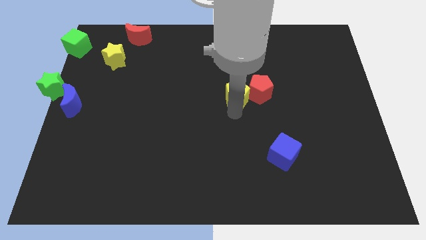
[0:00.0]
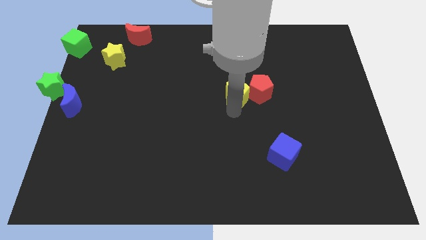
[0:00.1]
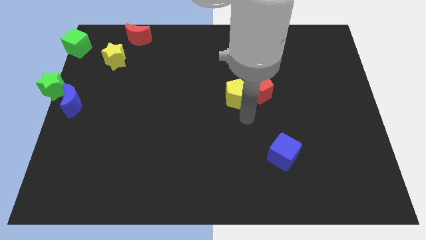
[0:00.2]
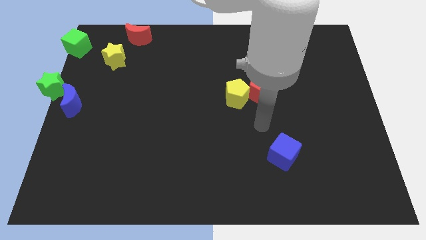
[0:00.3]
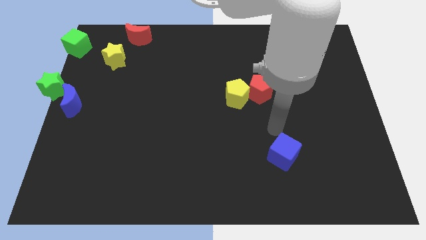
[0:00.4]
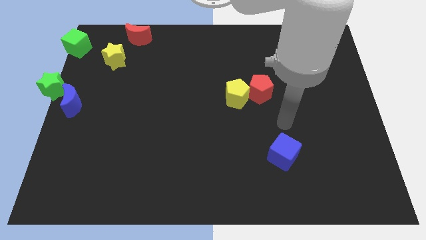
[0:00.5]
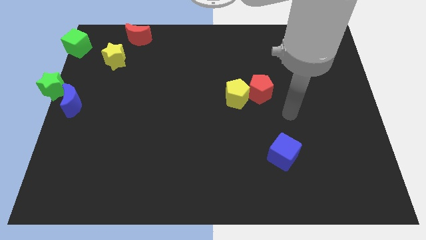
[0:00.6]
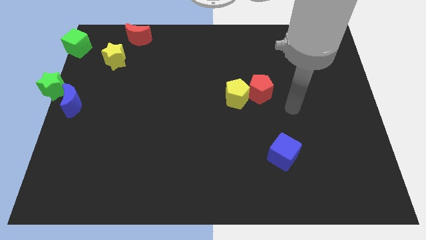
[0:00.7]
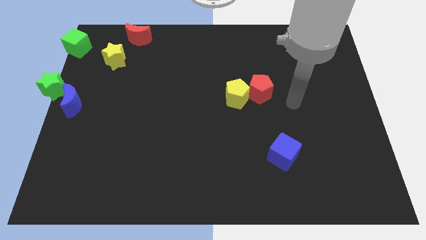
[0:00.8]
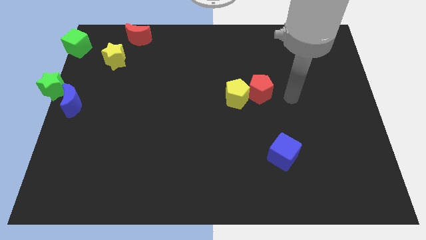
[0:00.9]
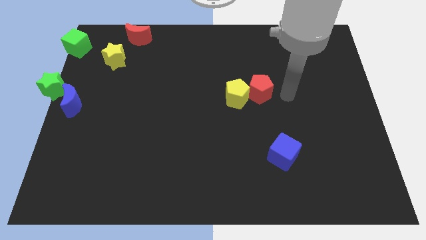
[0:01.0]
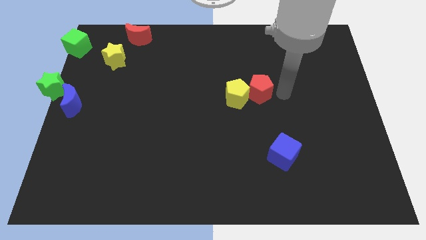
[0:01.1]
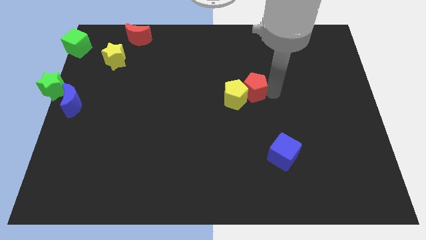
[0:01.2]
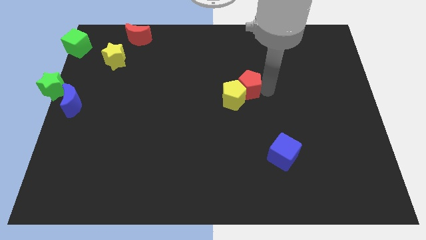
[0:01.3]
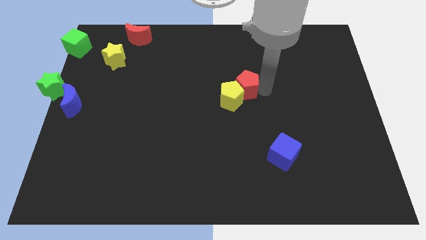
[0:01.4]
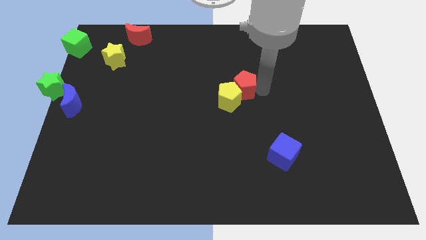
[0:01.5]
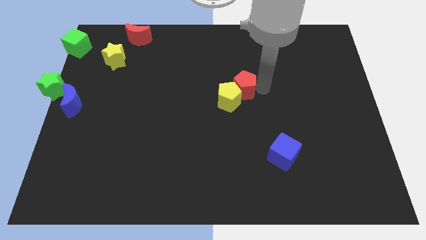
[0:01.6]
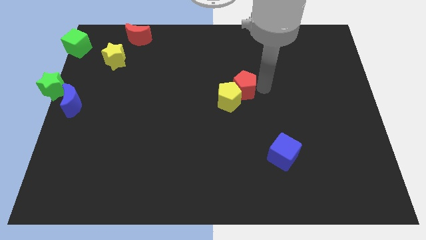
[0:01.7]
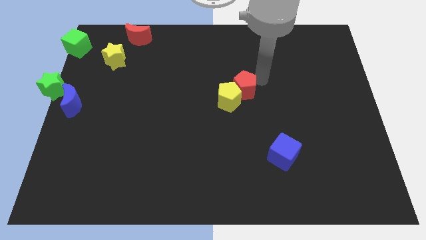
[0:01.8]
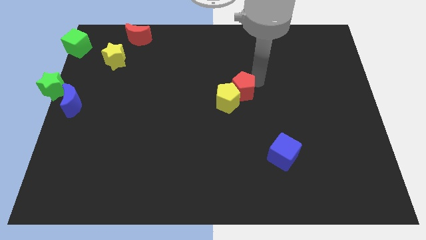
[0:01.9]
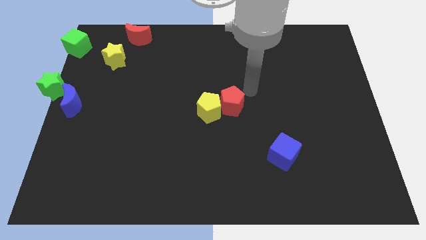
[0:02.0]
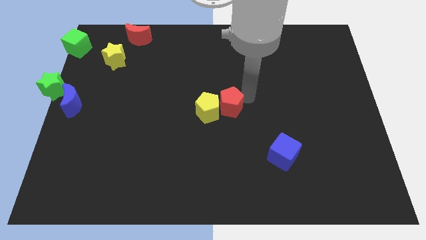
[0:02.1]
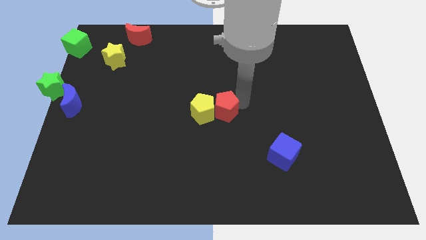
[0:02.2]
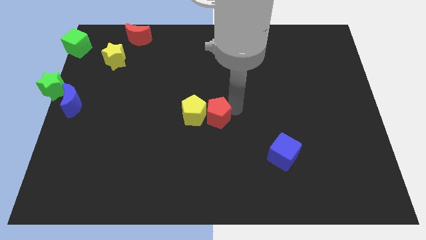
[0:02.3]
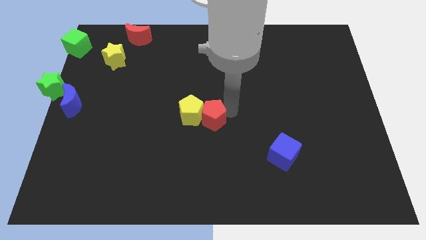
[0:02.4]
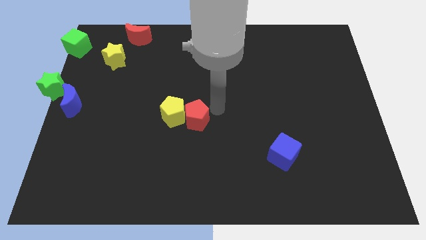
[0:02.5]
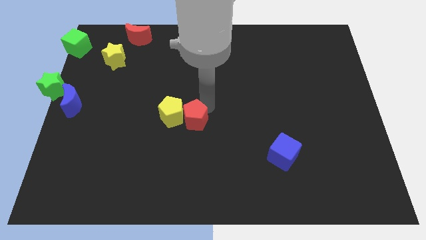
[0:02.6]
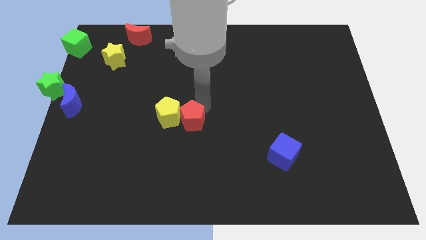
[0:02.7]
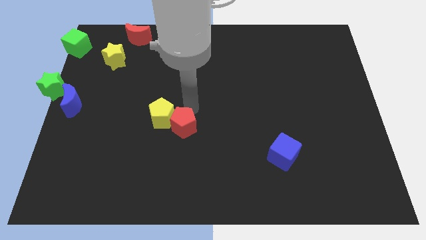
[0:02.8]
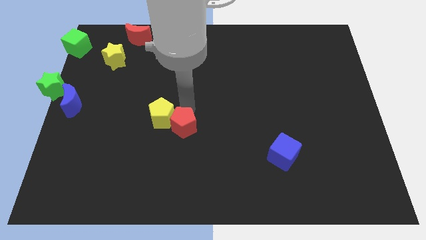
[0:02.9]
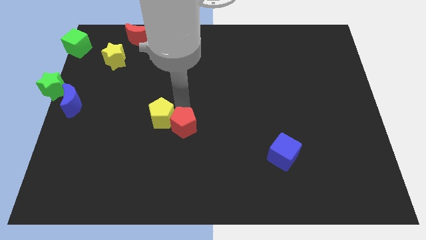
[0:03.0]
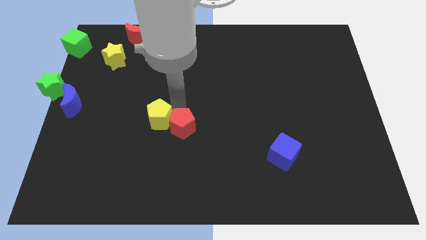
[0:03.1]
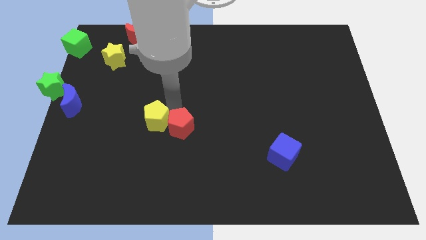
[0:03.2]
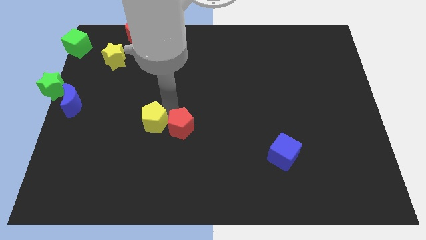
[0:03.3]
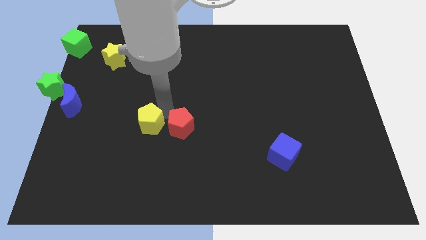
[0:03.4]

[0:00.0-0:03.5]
move yellow pentagon and red pentagon slightly left to the board

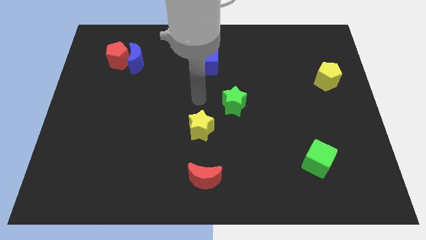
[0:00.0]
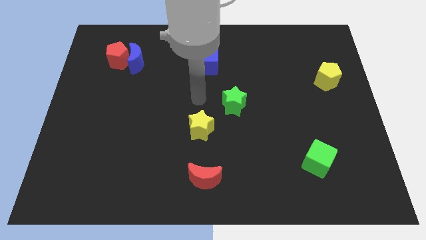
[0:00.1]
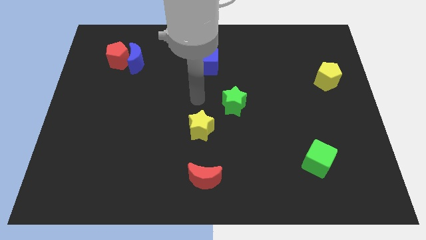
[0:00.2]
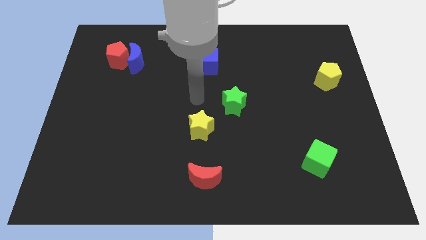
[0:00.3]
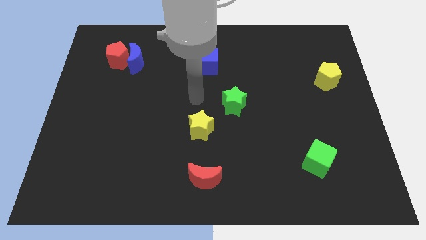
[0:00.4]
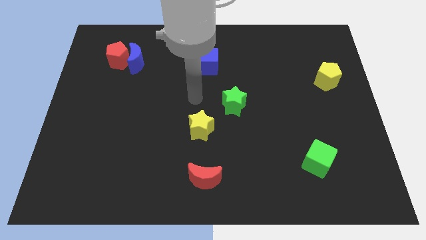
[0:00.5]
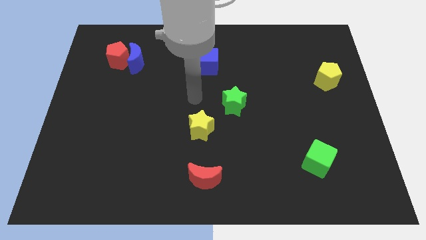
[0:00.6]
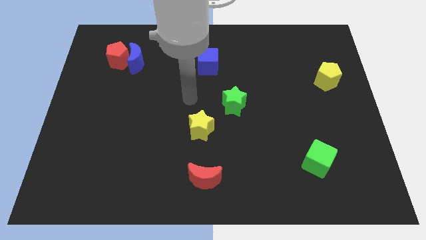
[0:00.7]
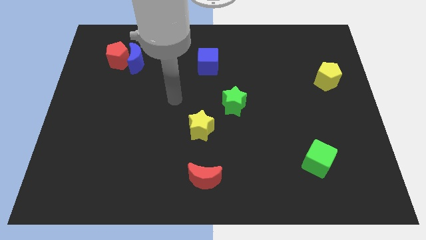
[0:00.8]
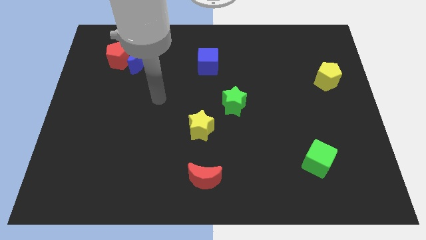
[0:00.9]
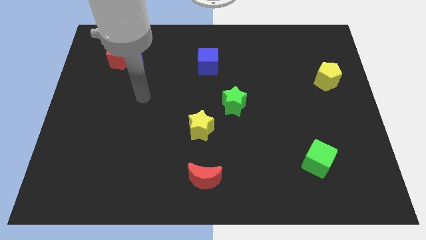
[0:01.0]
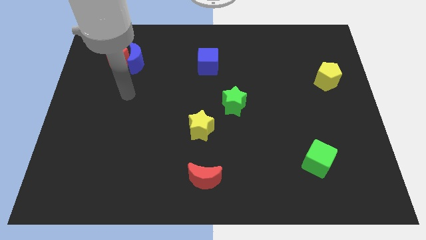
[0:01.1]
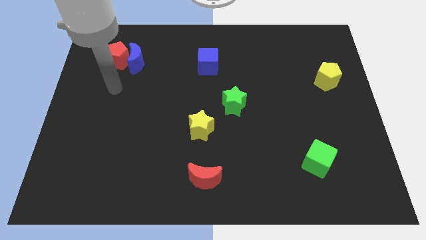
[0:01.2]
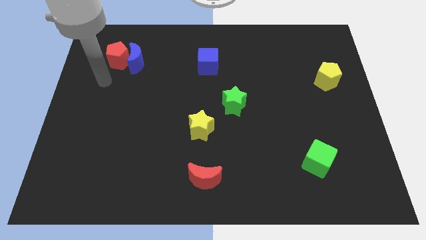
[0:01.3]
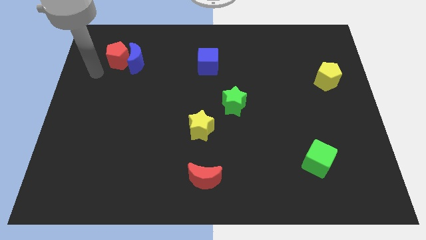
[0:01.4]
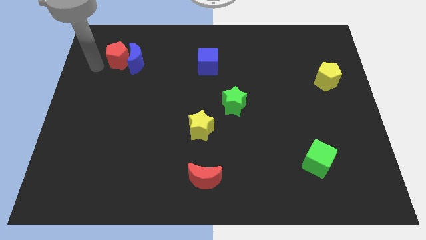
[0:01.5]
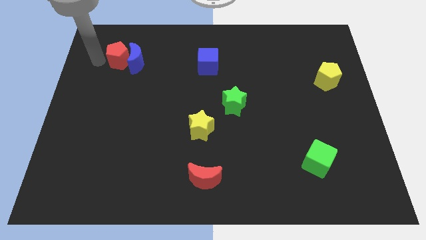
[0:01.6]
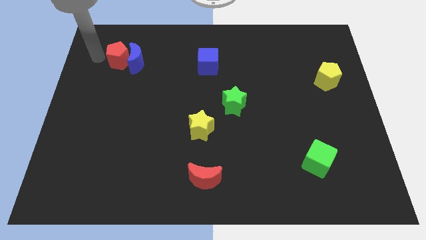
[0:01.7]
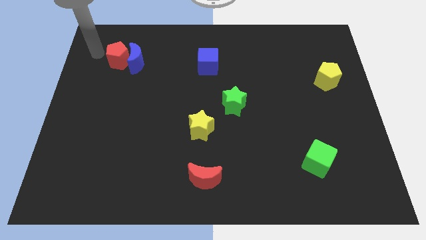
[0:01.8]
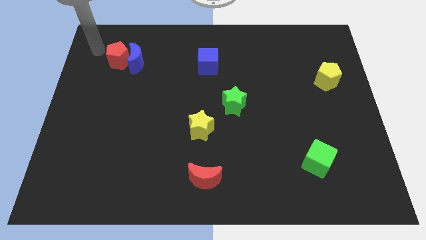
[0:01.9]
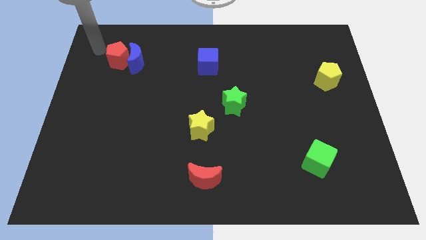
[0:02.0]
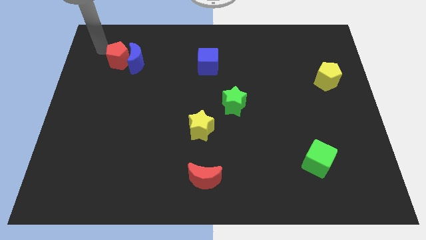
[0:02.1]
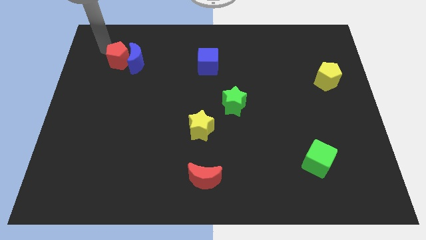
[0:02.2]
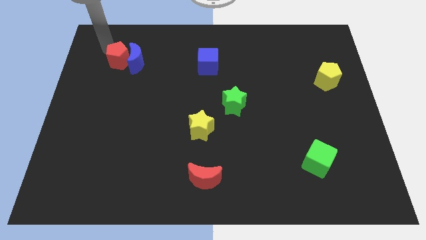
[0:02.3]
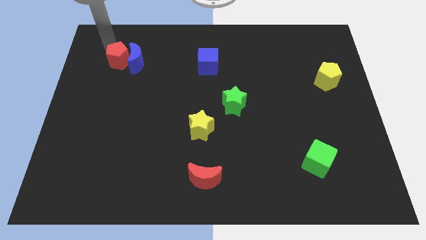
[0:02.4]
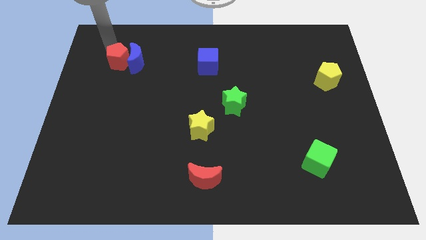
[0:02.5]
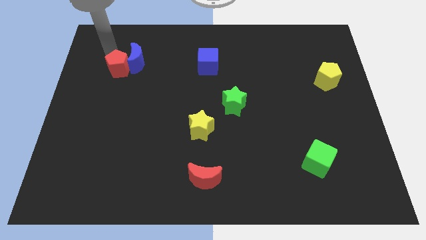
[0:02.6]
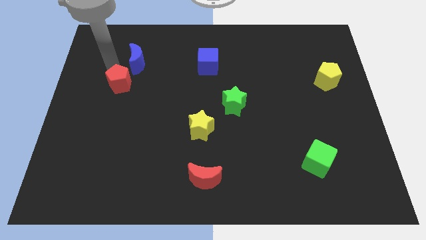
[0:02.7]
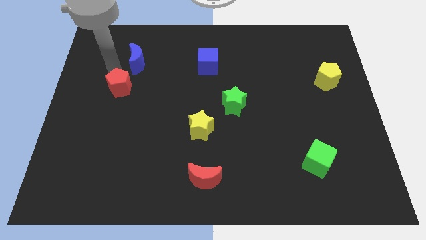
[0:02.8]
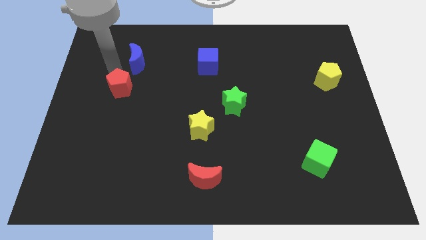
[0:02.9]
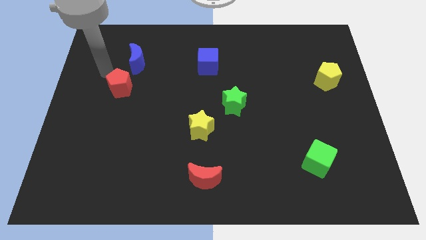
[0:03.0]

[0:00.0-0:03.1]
move the red pentagon down slightly

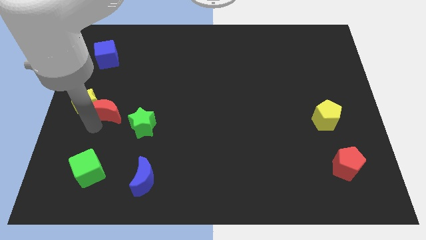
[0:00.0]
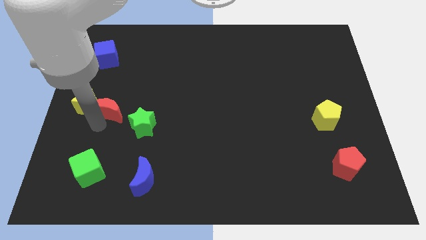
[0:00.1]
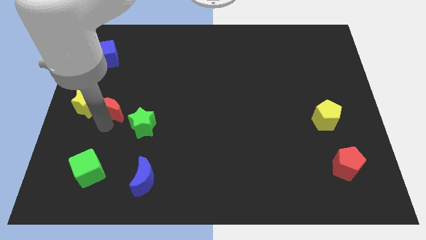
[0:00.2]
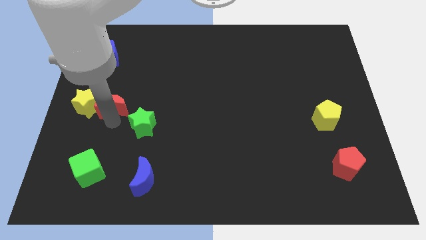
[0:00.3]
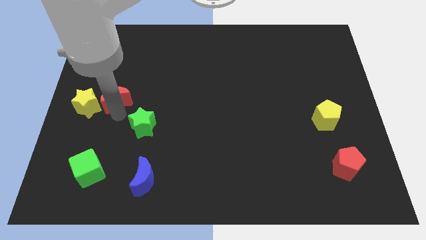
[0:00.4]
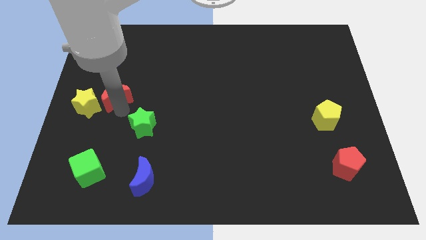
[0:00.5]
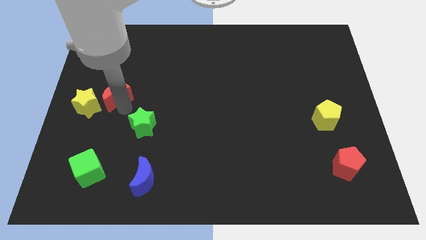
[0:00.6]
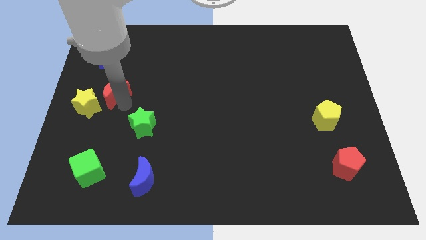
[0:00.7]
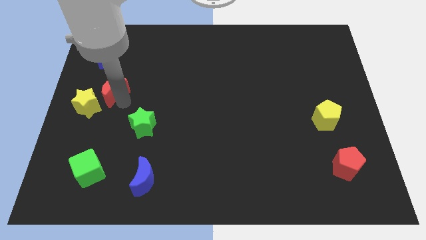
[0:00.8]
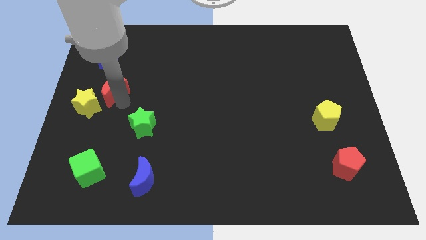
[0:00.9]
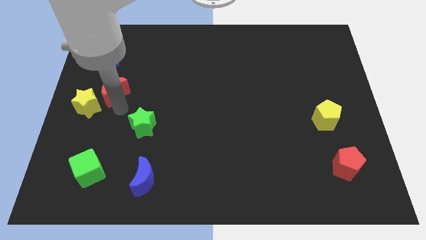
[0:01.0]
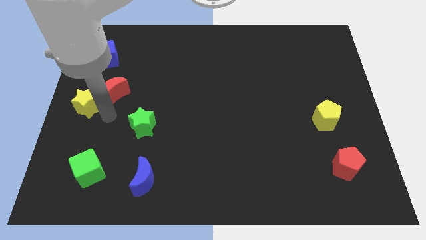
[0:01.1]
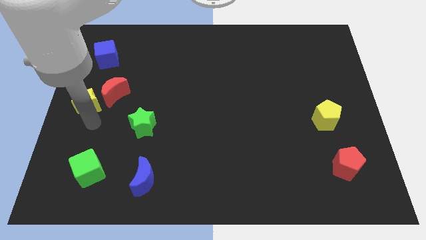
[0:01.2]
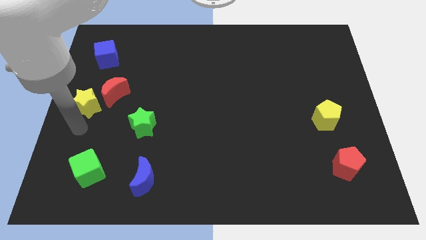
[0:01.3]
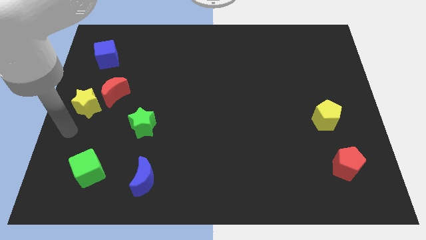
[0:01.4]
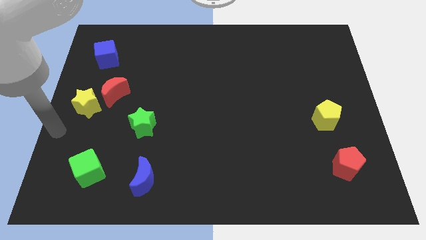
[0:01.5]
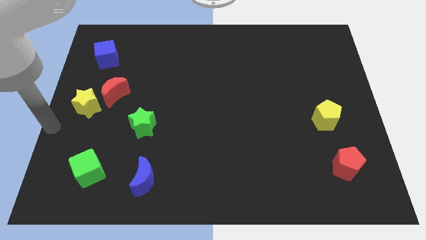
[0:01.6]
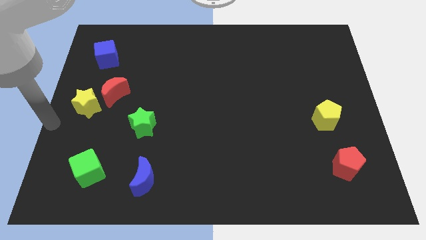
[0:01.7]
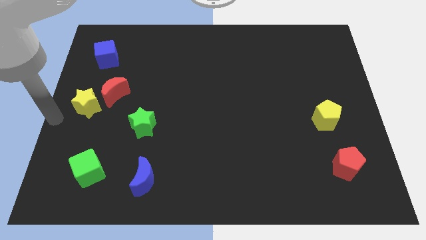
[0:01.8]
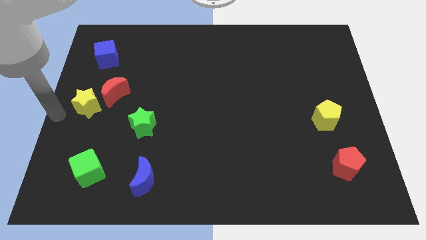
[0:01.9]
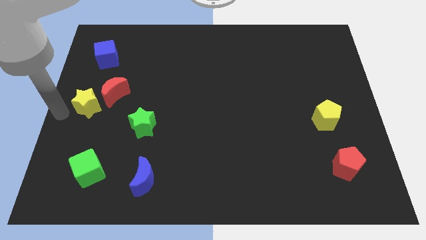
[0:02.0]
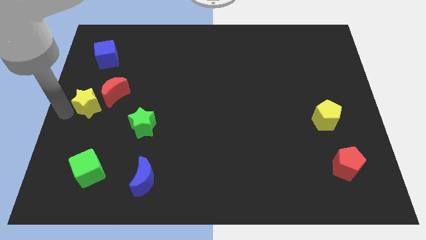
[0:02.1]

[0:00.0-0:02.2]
push the red moon away from the yellow star

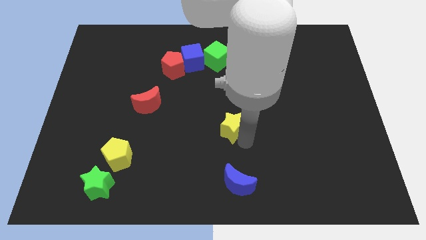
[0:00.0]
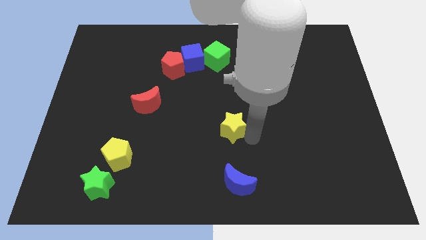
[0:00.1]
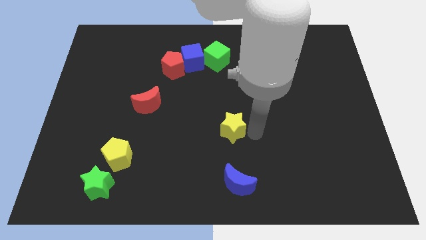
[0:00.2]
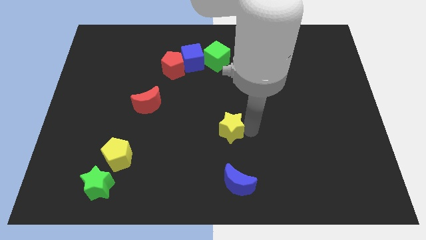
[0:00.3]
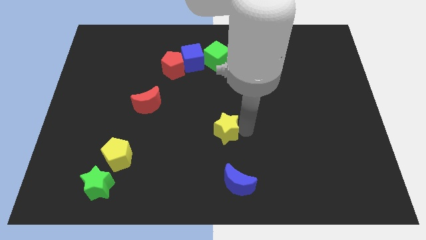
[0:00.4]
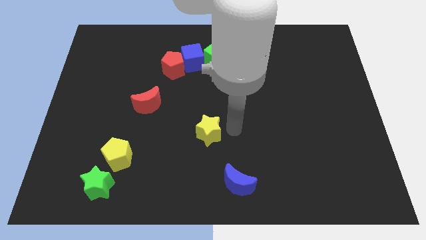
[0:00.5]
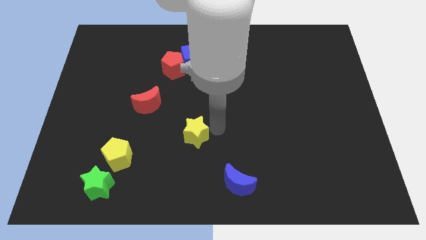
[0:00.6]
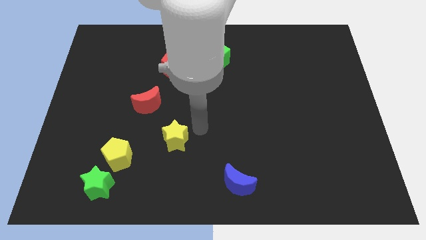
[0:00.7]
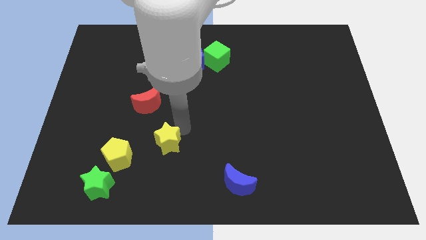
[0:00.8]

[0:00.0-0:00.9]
move yellow star towards yellow pentagon
